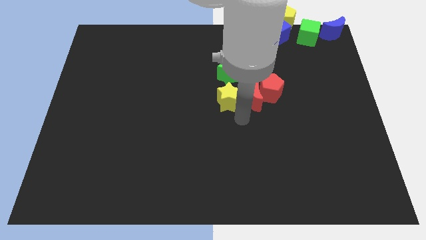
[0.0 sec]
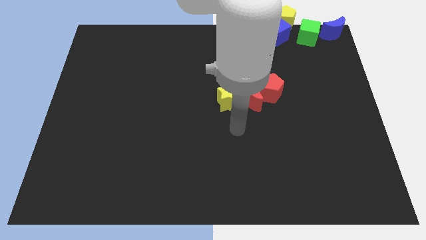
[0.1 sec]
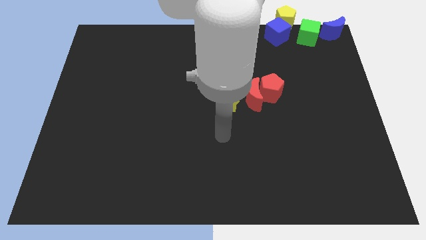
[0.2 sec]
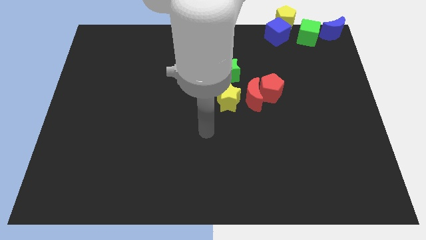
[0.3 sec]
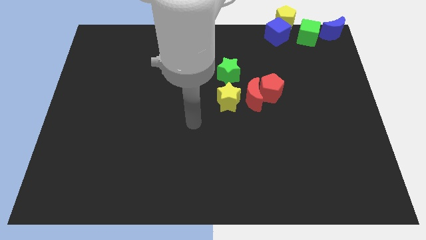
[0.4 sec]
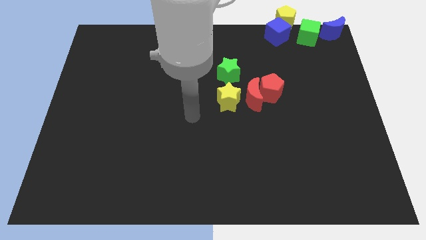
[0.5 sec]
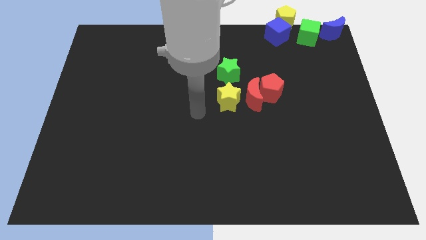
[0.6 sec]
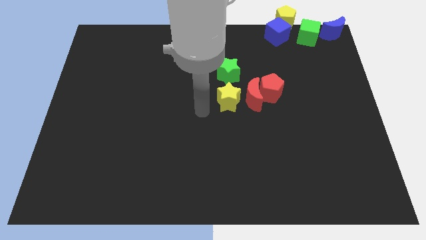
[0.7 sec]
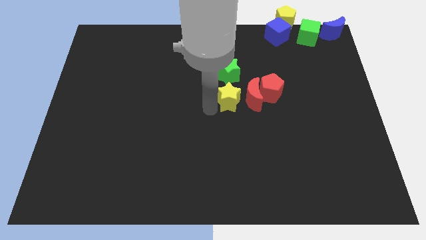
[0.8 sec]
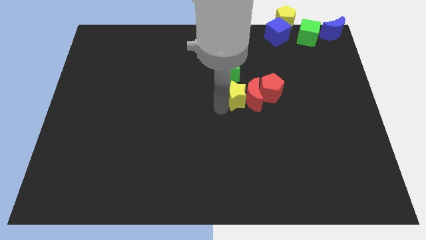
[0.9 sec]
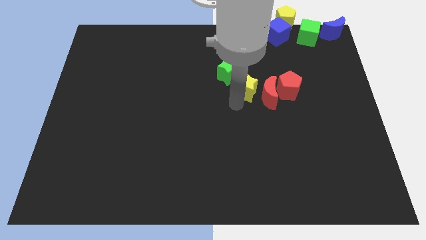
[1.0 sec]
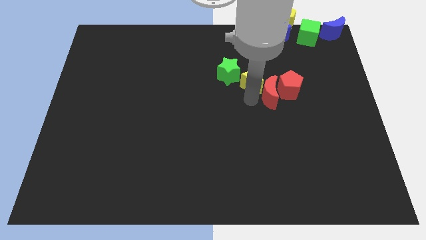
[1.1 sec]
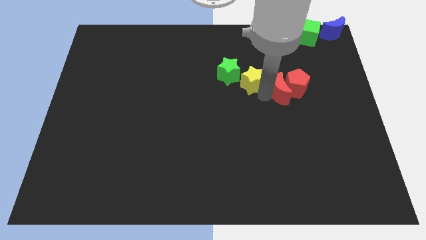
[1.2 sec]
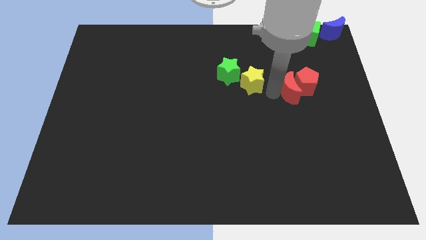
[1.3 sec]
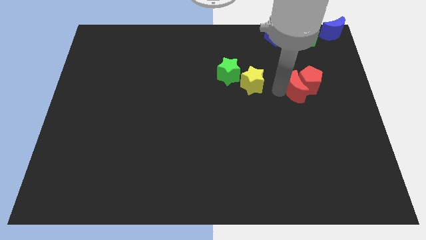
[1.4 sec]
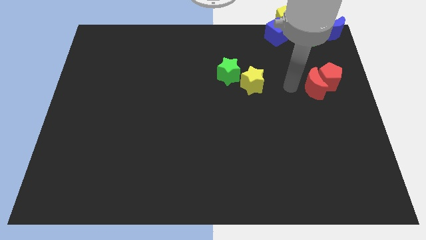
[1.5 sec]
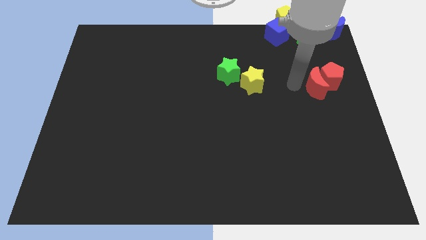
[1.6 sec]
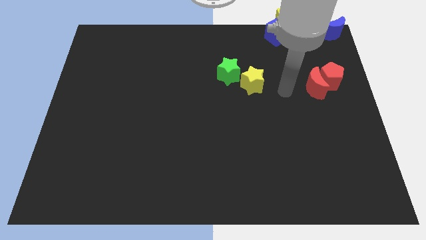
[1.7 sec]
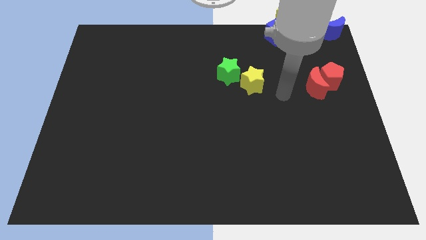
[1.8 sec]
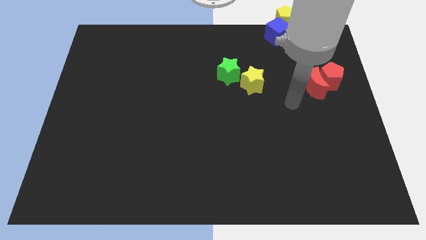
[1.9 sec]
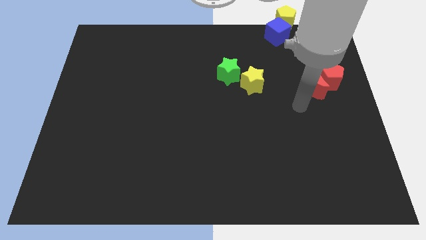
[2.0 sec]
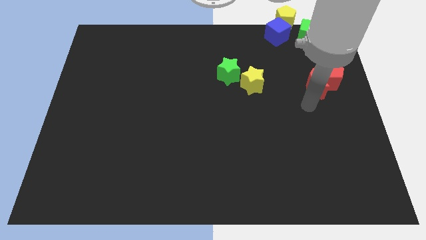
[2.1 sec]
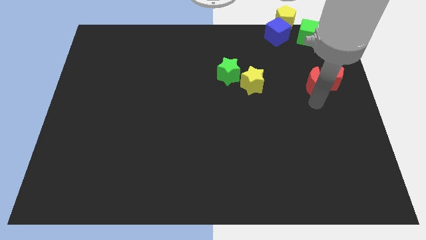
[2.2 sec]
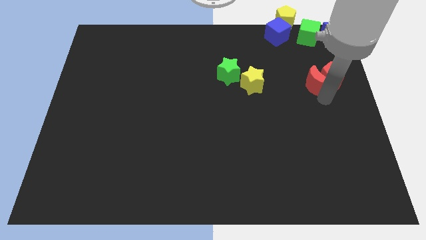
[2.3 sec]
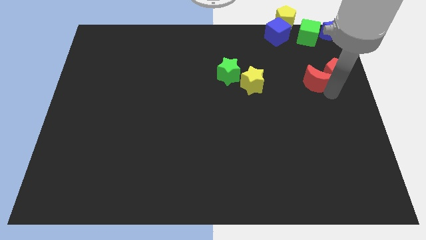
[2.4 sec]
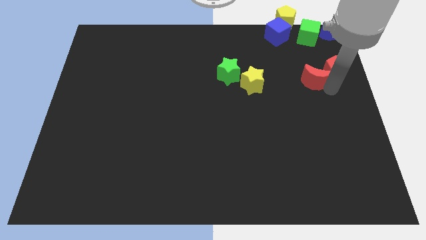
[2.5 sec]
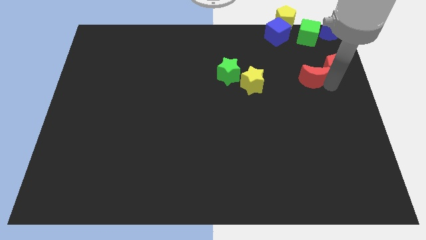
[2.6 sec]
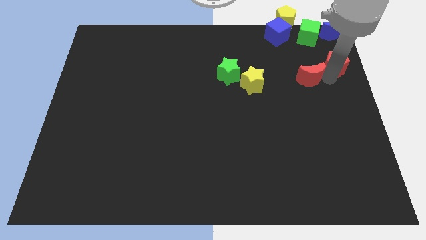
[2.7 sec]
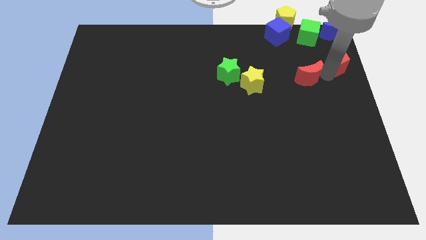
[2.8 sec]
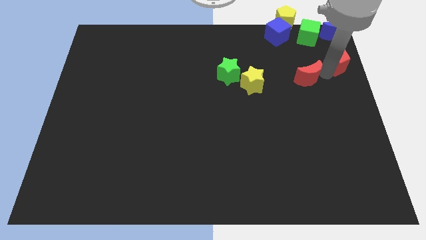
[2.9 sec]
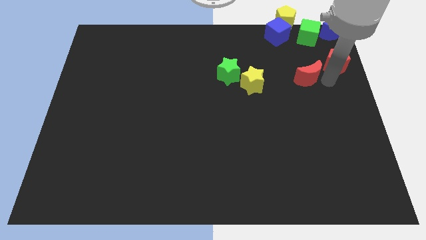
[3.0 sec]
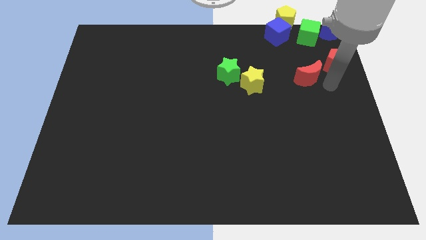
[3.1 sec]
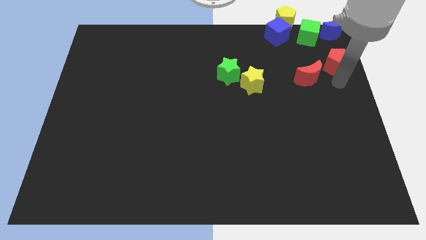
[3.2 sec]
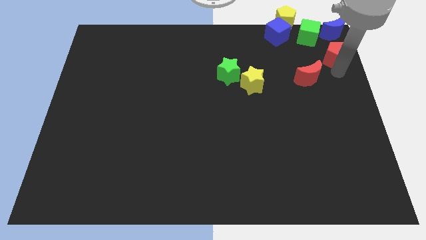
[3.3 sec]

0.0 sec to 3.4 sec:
move the yellow star and the red blocks to the right side of the board

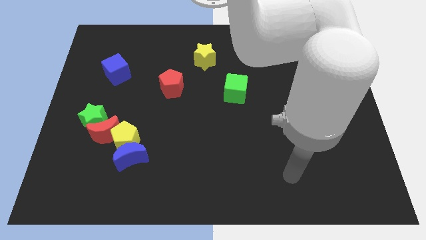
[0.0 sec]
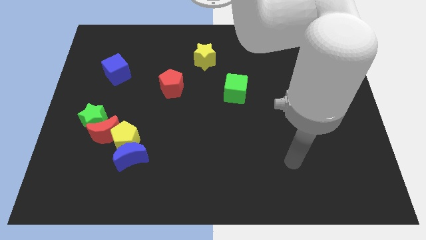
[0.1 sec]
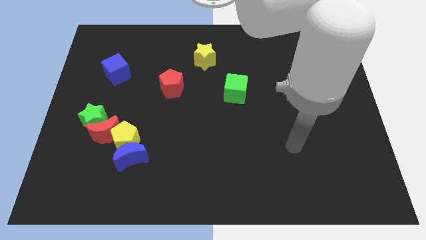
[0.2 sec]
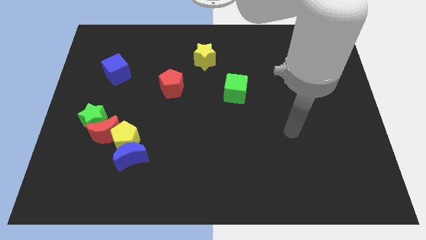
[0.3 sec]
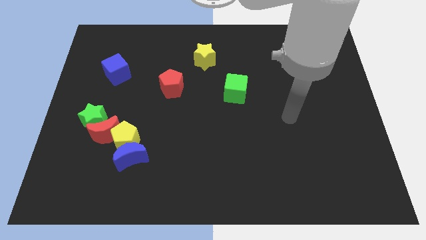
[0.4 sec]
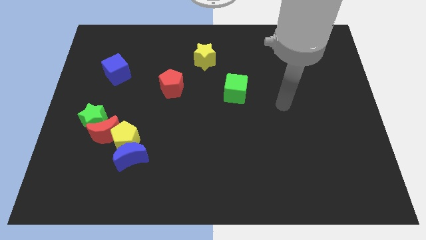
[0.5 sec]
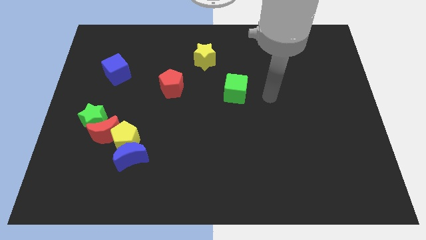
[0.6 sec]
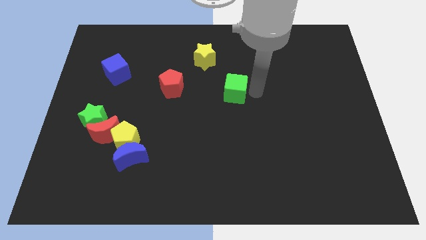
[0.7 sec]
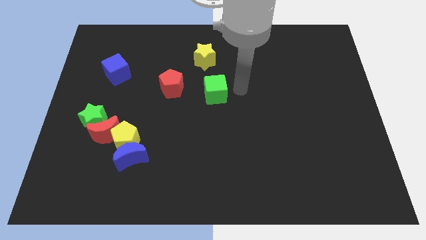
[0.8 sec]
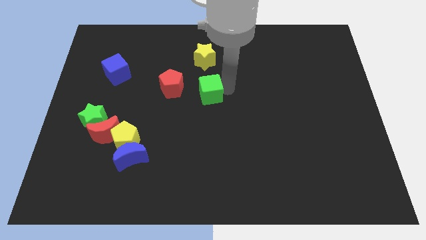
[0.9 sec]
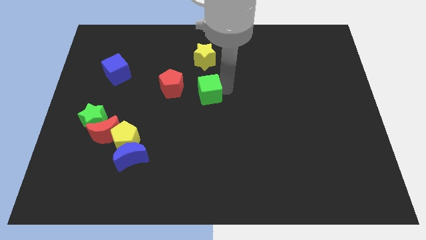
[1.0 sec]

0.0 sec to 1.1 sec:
push the green cube towards red pentagon

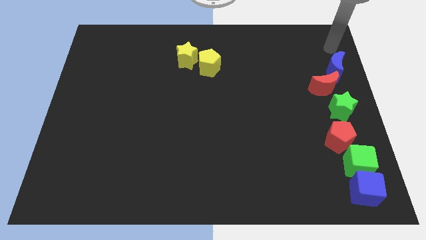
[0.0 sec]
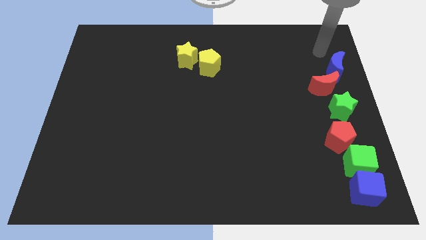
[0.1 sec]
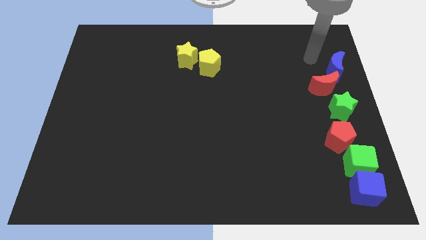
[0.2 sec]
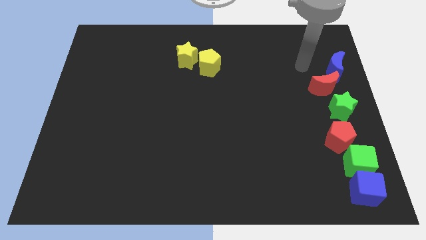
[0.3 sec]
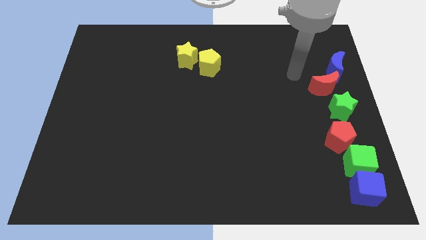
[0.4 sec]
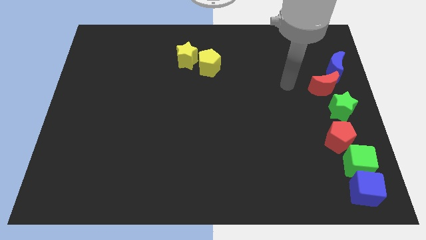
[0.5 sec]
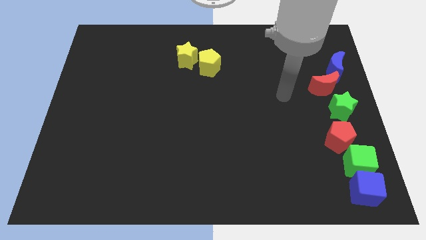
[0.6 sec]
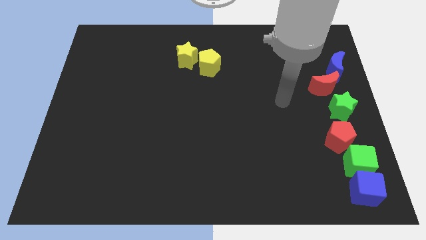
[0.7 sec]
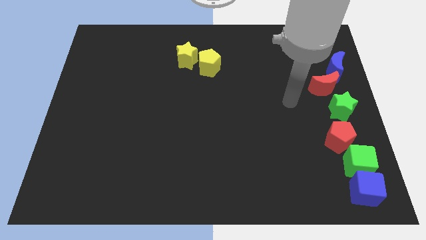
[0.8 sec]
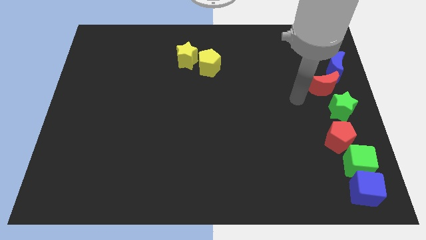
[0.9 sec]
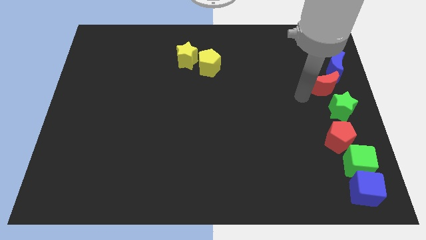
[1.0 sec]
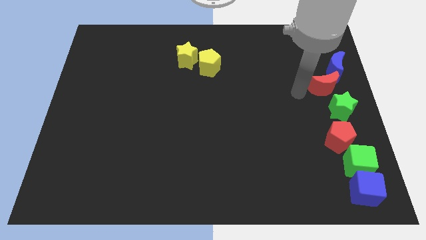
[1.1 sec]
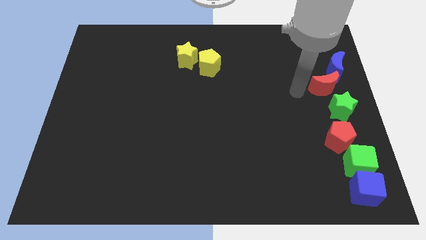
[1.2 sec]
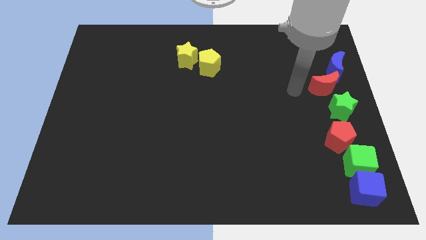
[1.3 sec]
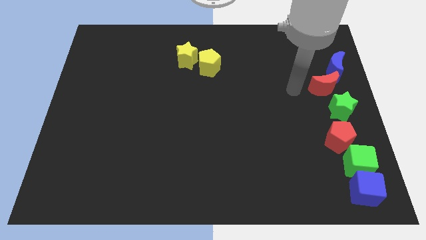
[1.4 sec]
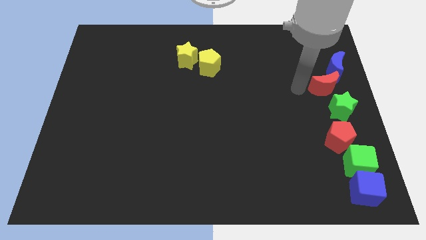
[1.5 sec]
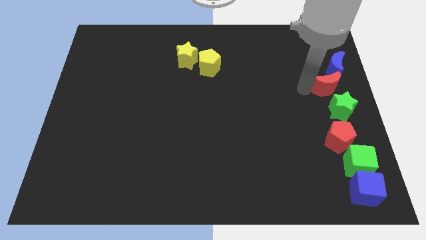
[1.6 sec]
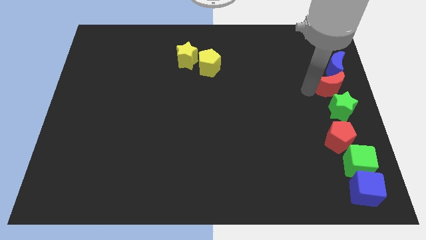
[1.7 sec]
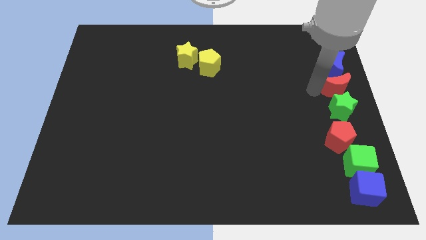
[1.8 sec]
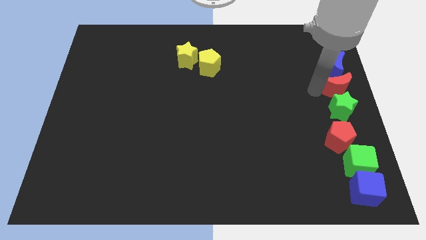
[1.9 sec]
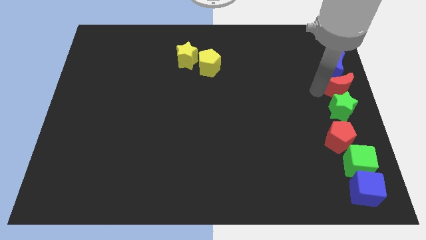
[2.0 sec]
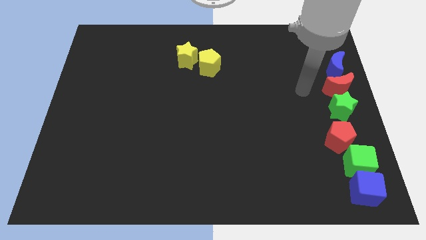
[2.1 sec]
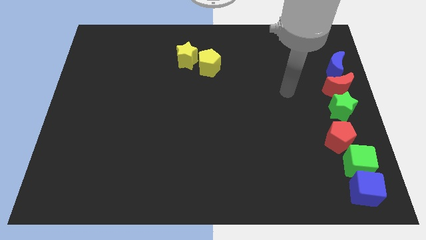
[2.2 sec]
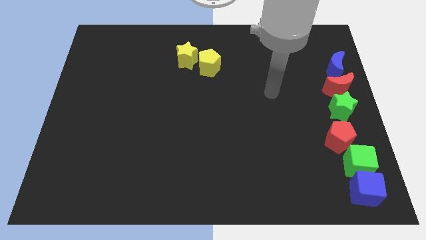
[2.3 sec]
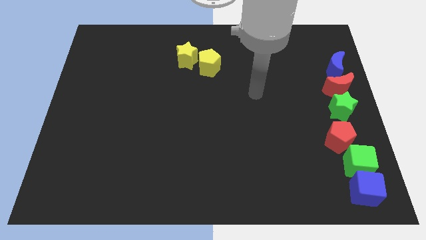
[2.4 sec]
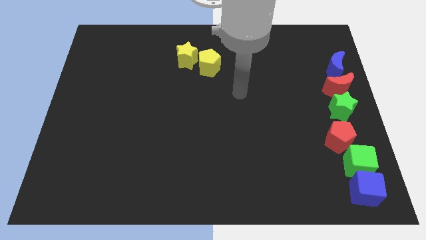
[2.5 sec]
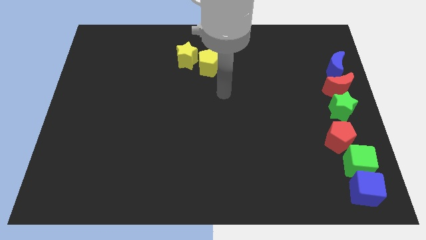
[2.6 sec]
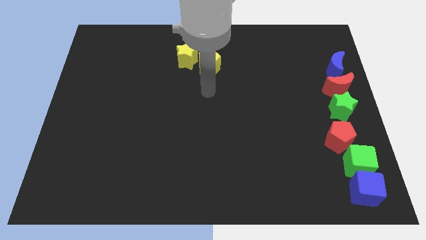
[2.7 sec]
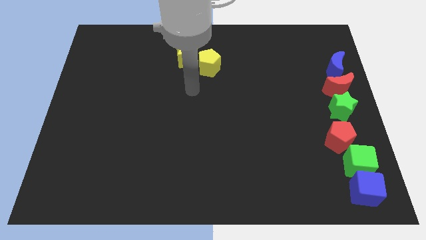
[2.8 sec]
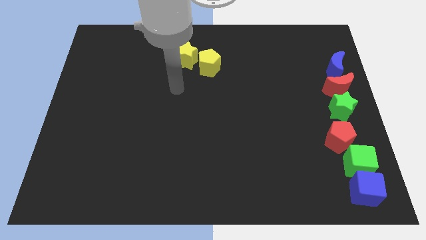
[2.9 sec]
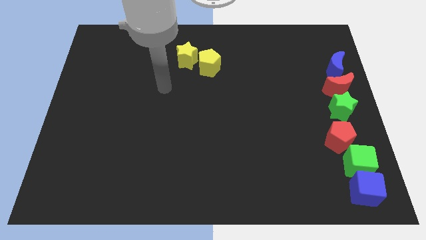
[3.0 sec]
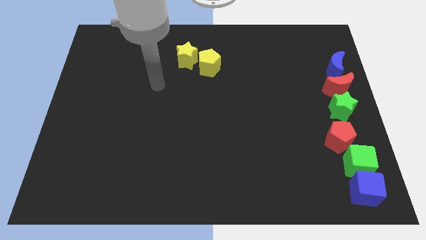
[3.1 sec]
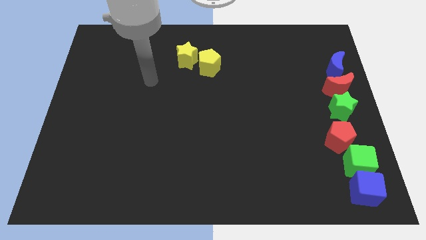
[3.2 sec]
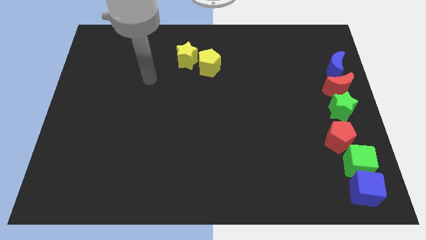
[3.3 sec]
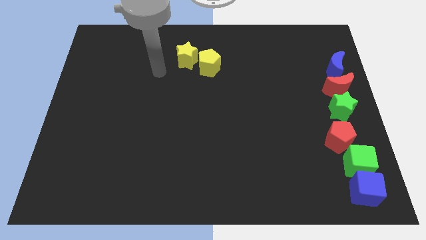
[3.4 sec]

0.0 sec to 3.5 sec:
push the red moon between the blue moon and green star

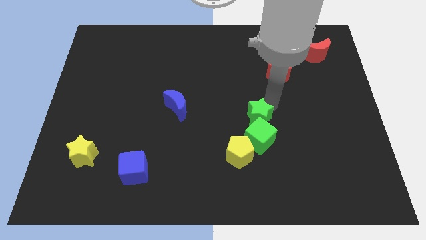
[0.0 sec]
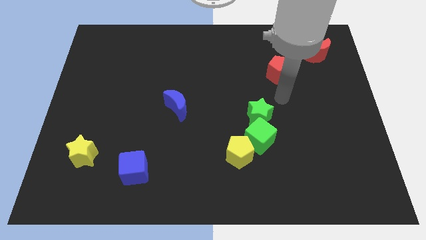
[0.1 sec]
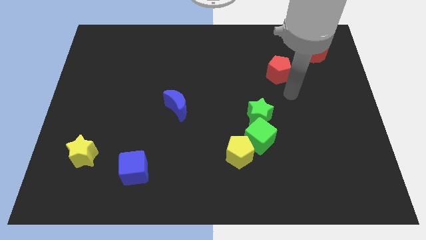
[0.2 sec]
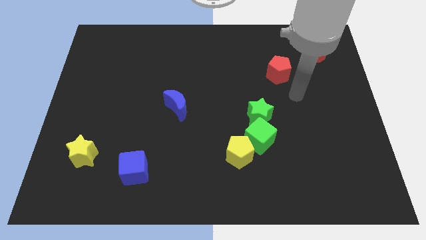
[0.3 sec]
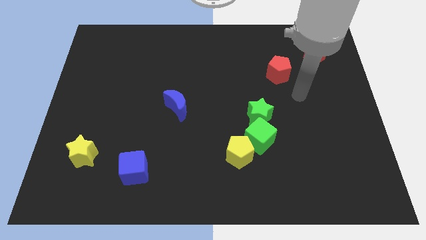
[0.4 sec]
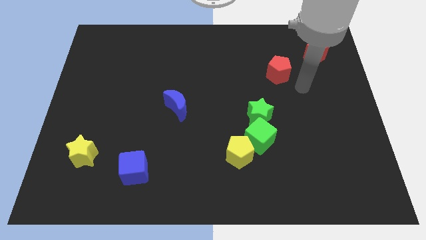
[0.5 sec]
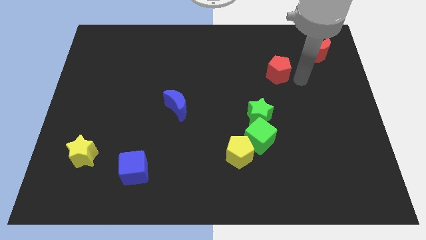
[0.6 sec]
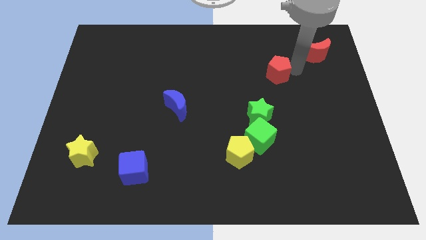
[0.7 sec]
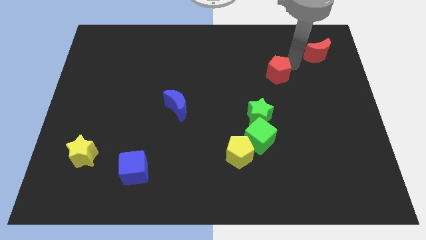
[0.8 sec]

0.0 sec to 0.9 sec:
point your arm in between the red blocks

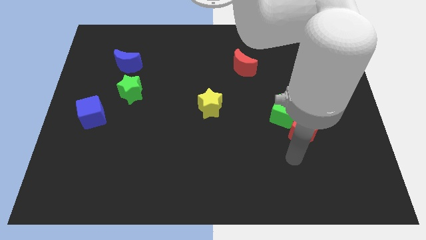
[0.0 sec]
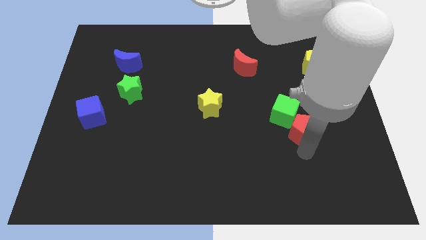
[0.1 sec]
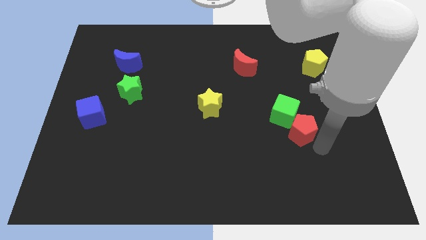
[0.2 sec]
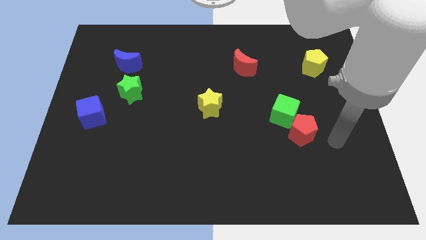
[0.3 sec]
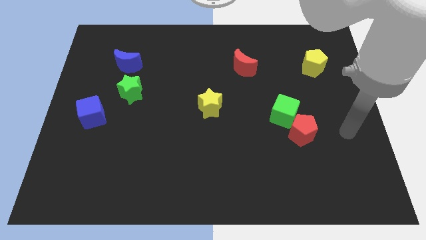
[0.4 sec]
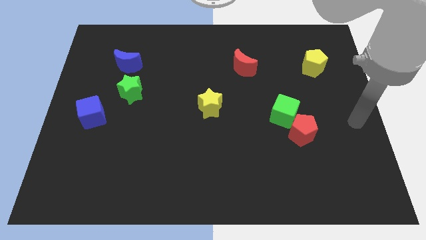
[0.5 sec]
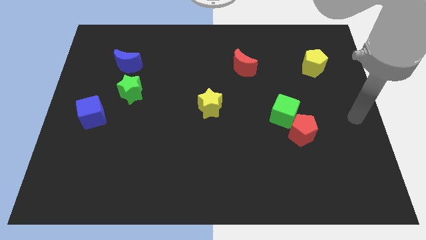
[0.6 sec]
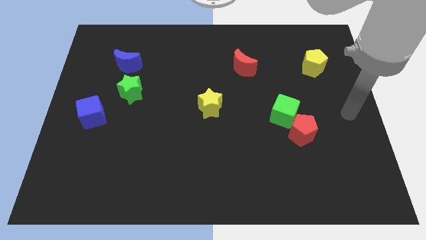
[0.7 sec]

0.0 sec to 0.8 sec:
move the arm towards the right center of the board
